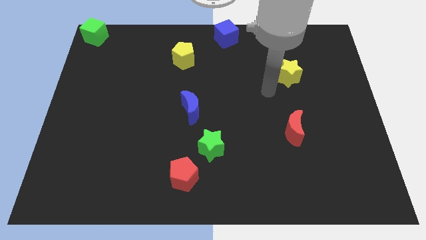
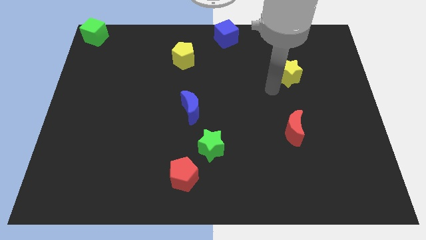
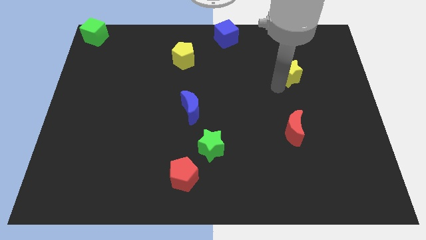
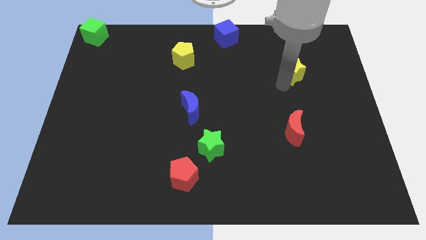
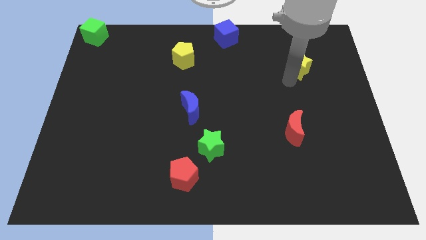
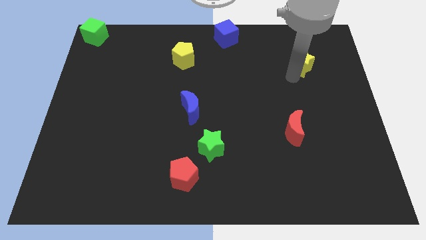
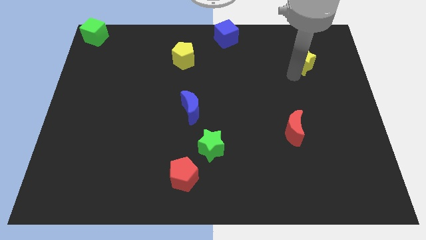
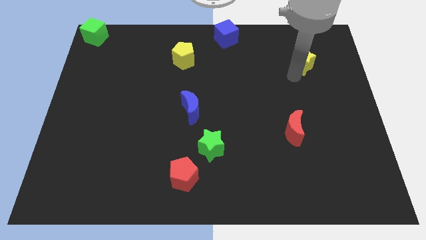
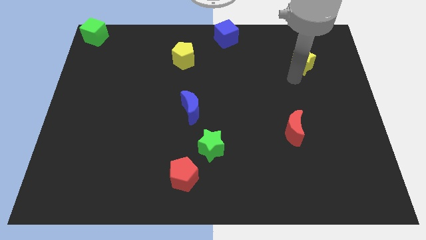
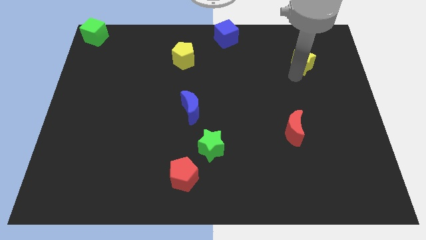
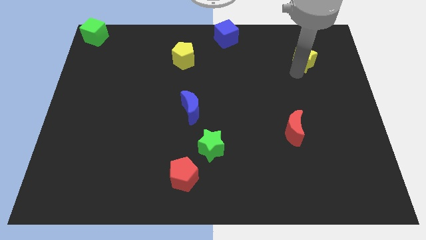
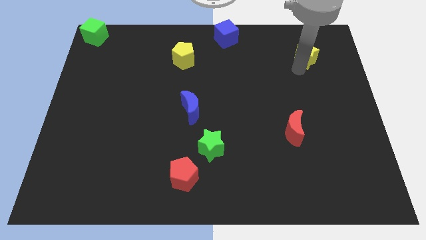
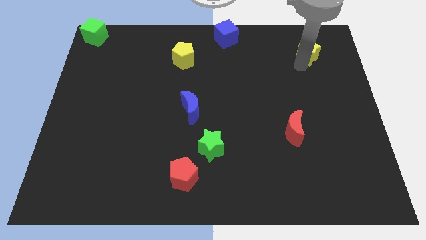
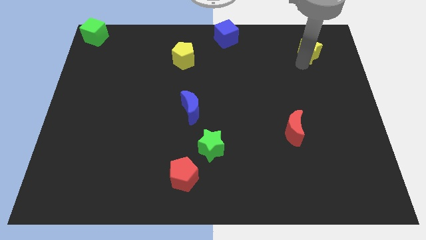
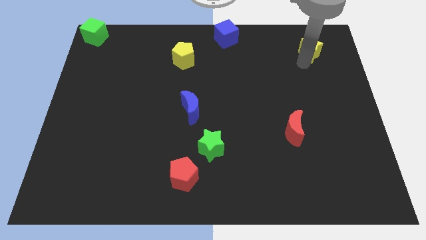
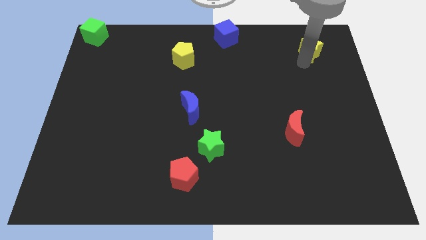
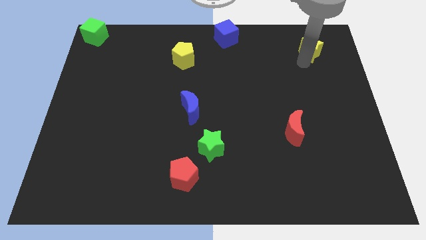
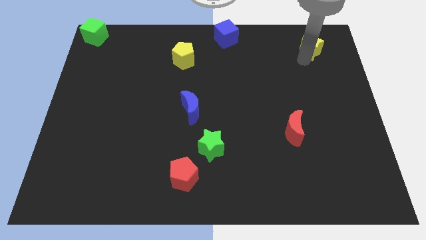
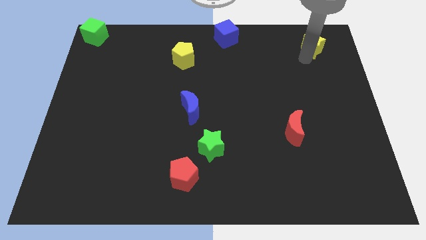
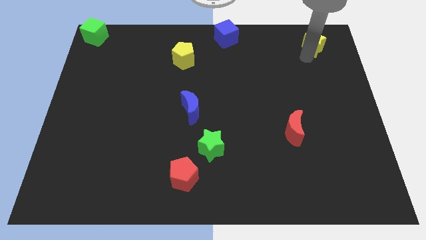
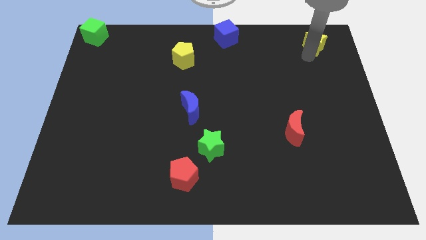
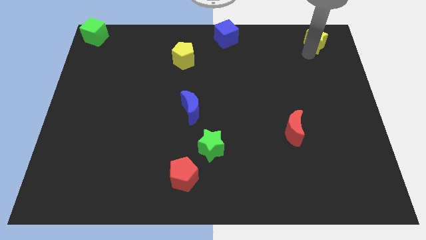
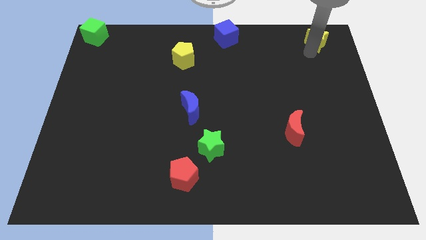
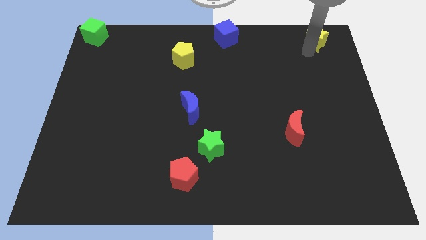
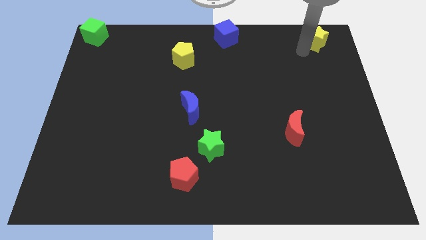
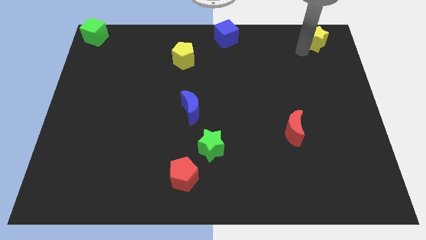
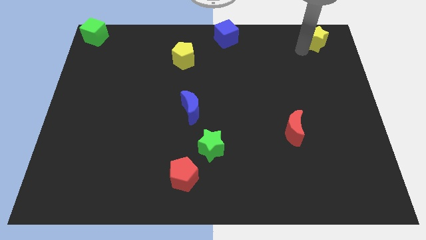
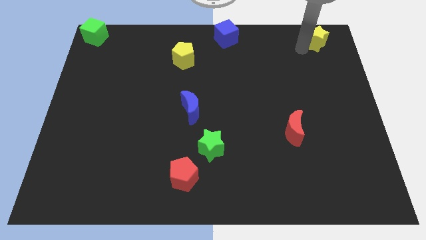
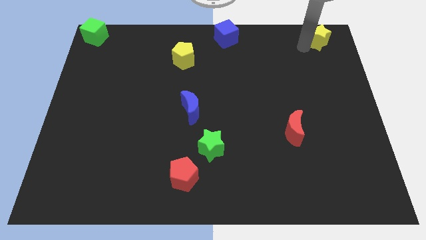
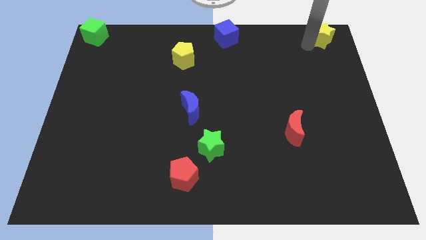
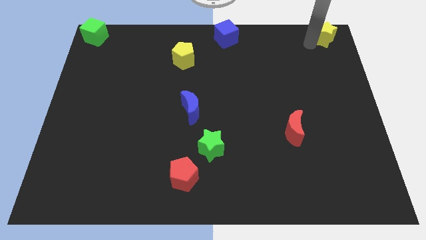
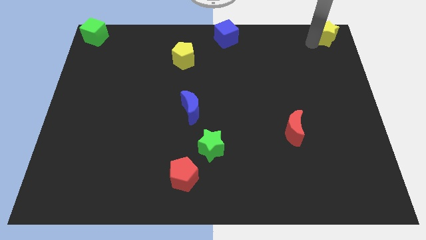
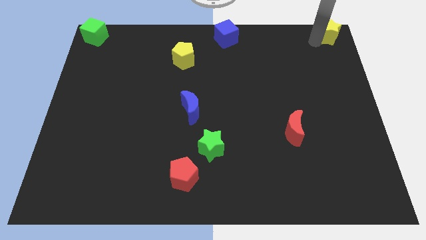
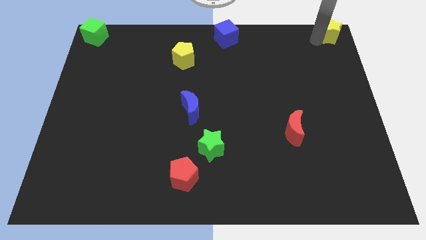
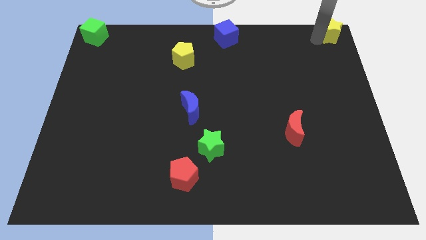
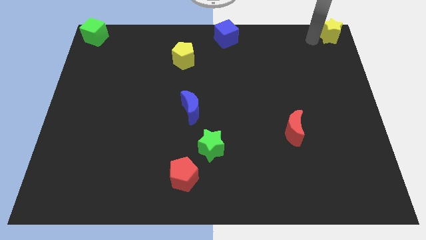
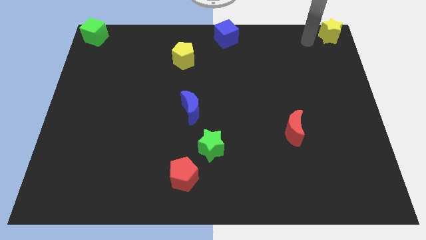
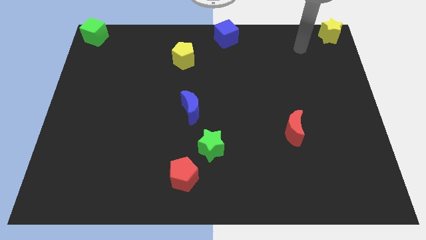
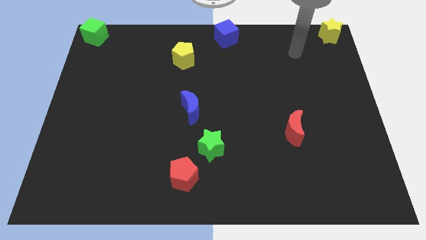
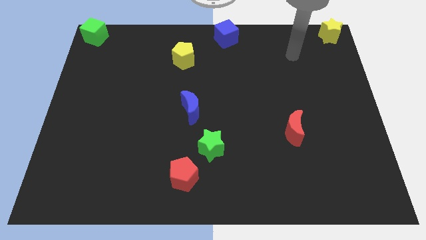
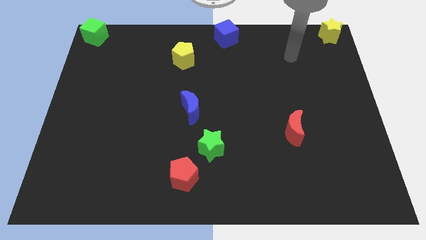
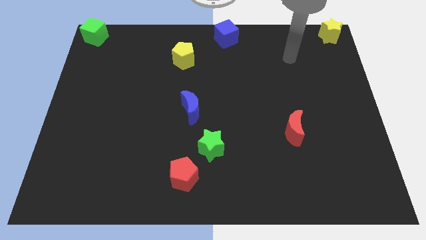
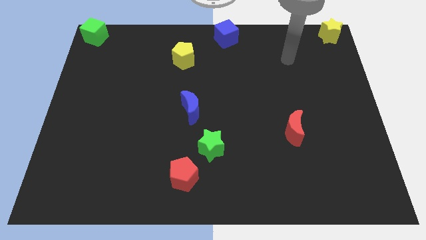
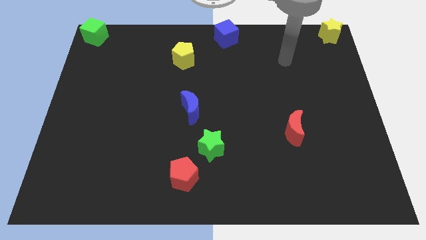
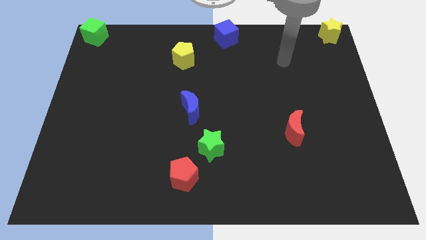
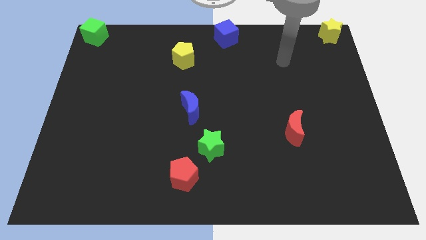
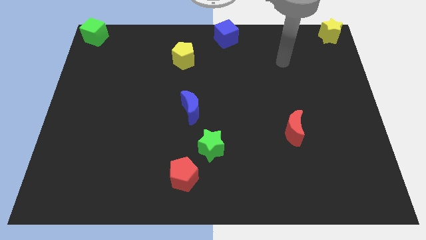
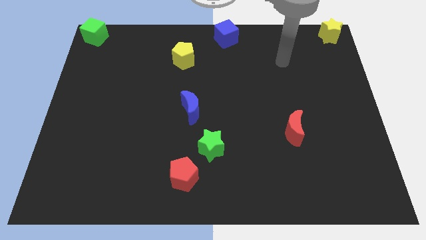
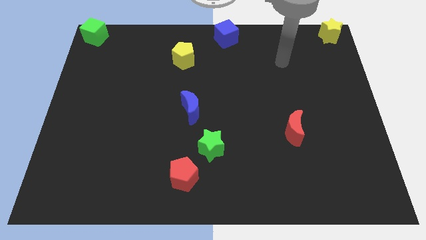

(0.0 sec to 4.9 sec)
push the yellow star towards the top right of the board

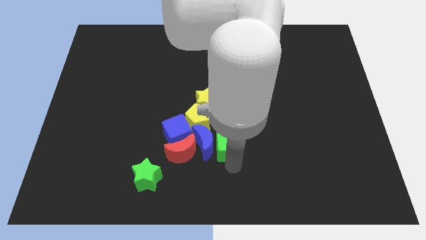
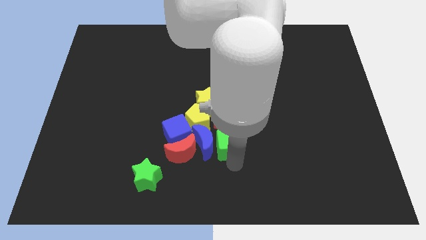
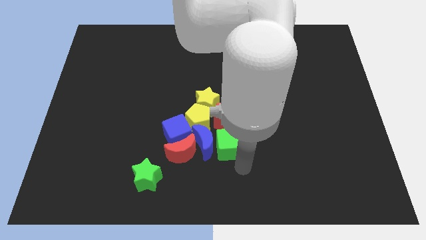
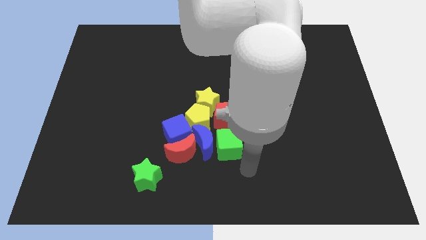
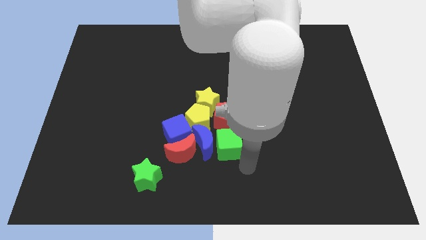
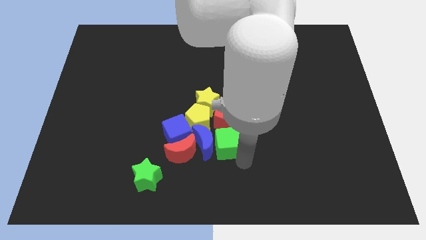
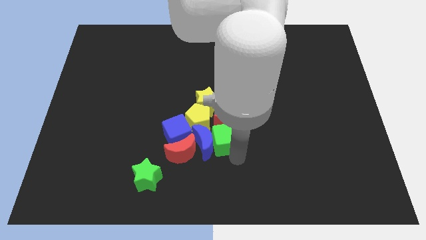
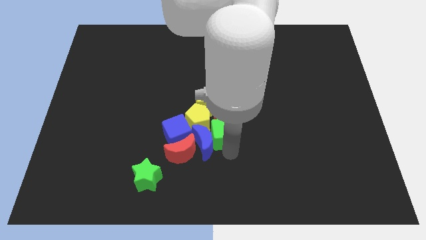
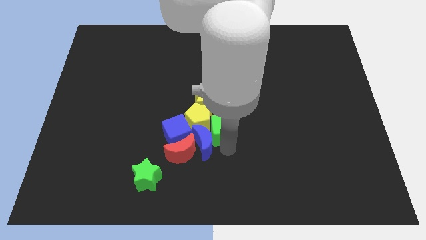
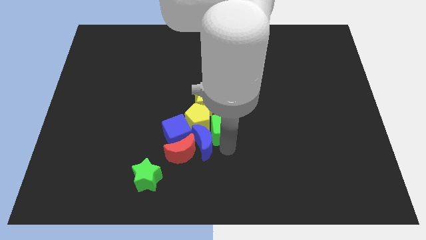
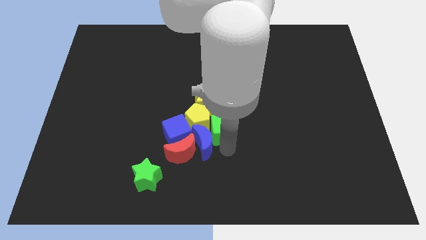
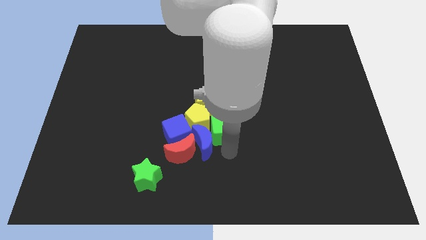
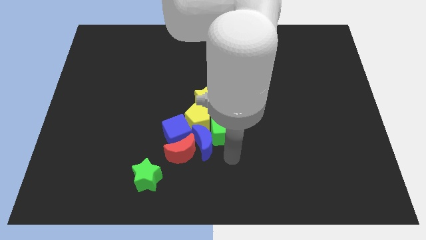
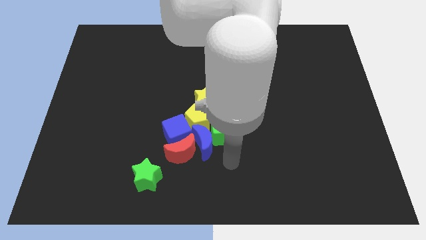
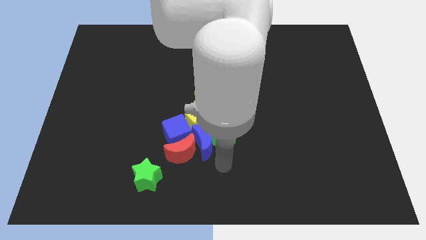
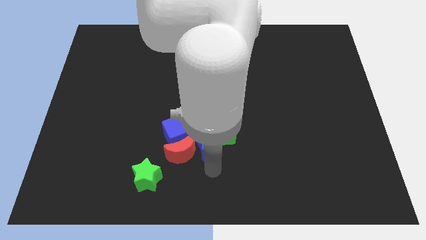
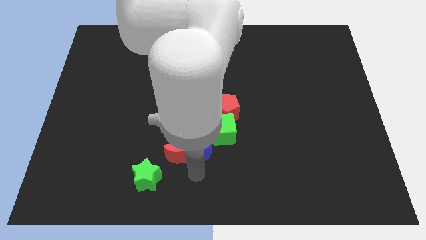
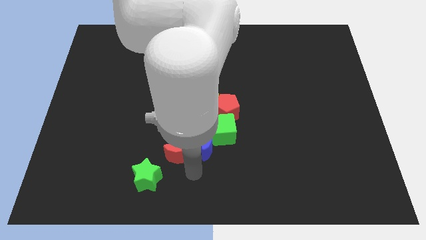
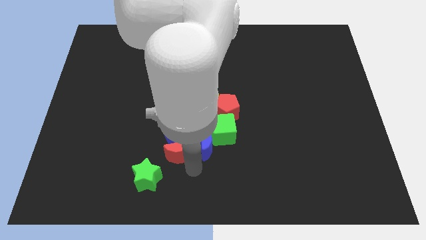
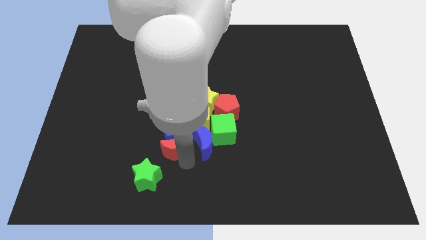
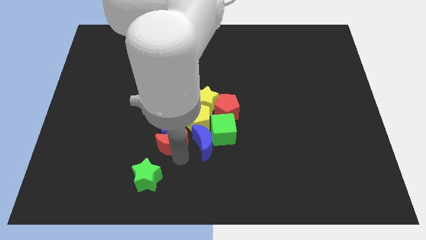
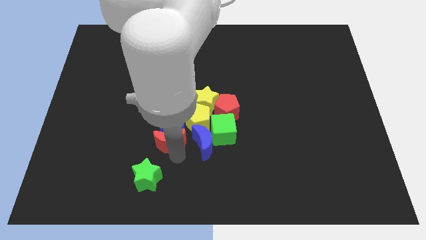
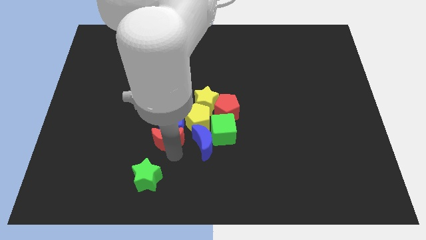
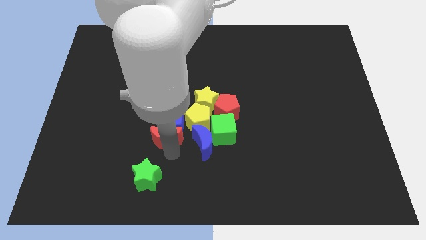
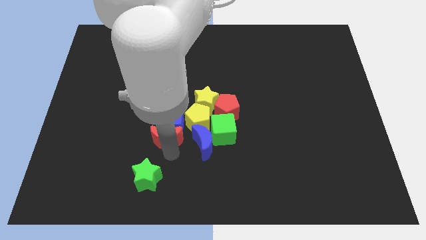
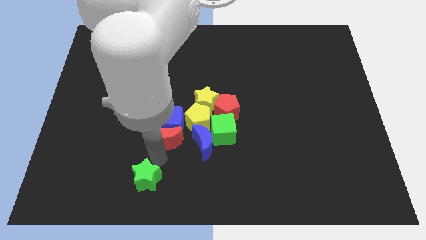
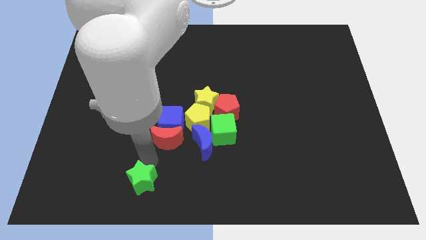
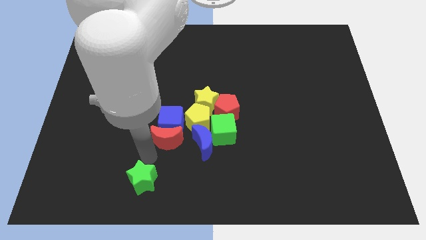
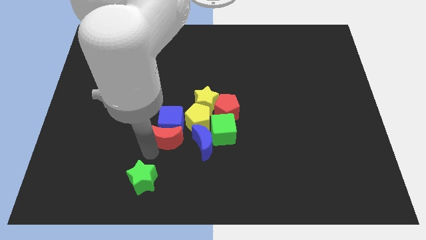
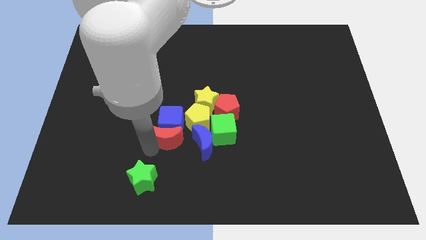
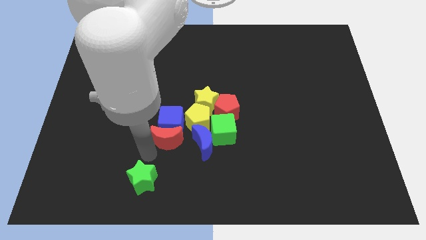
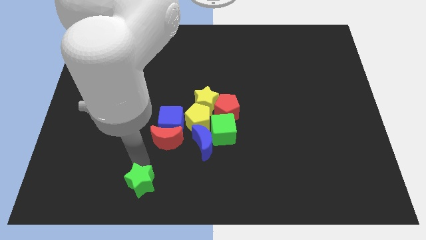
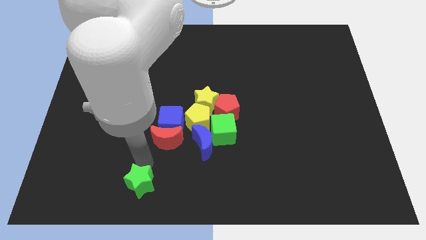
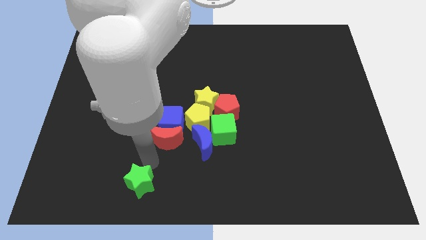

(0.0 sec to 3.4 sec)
push the green cube into the red pentagon

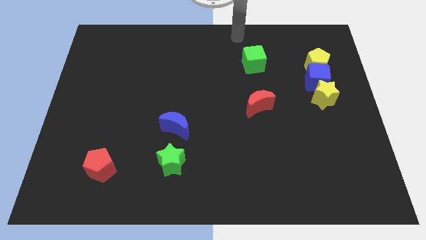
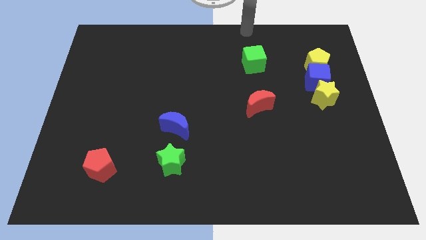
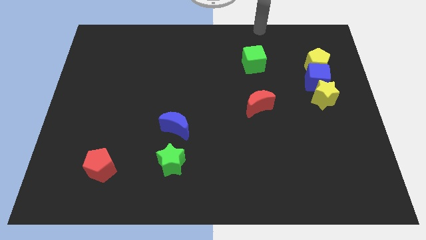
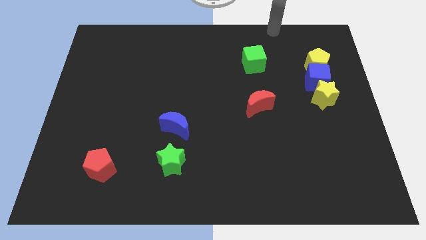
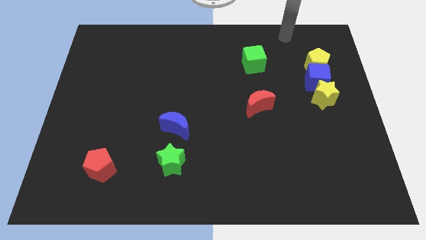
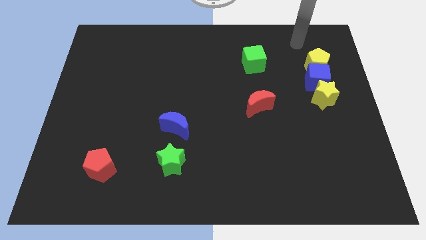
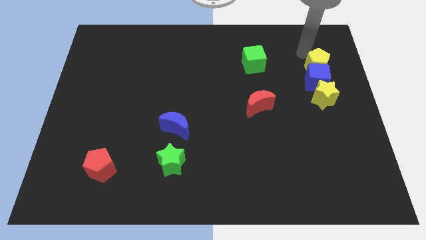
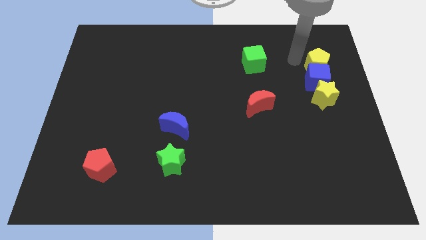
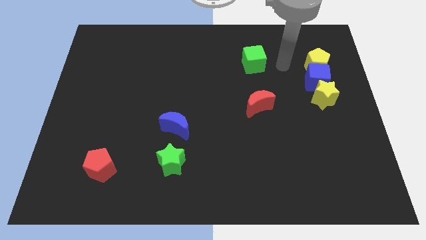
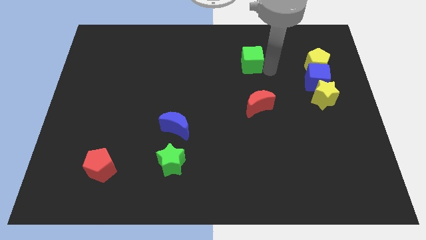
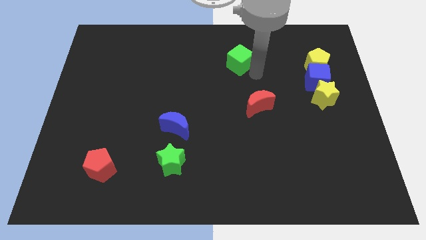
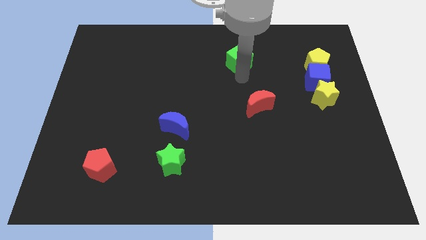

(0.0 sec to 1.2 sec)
turn the green cube towards the center top of the board
